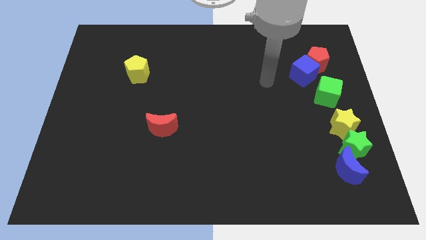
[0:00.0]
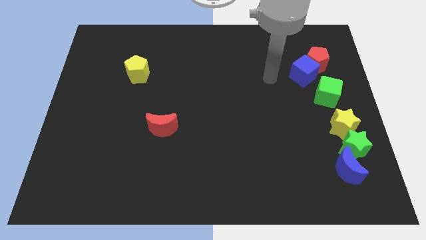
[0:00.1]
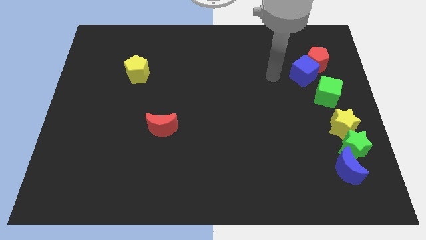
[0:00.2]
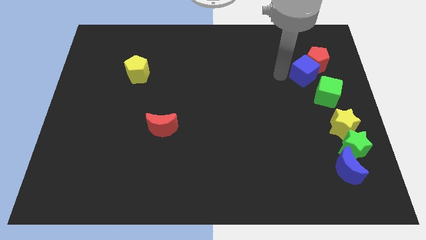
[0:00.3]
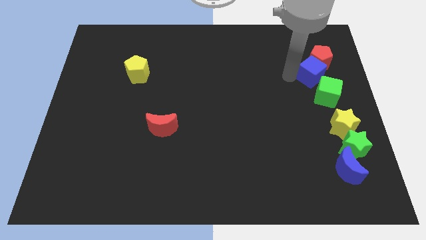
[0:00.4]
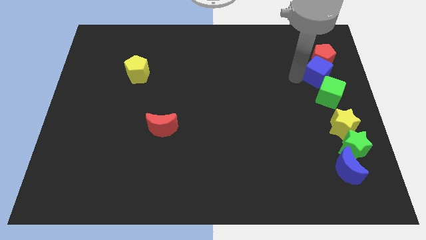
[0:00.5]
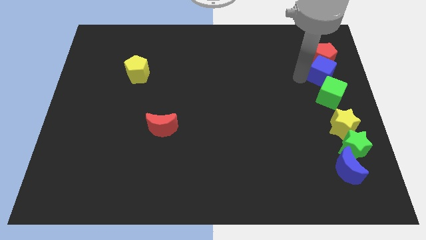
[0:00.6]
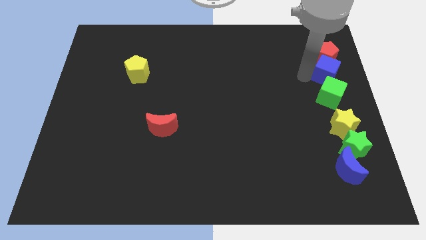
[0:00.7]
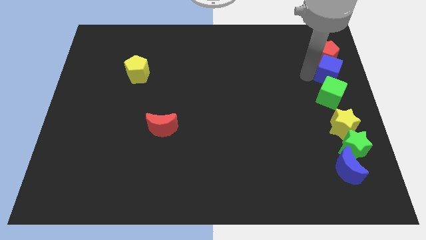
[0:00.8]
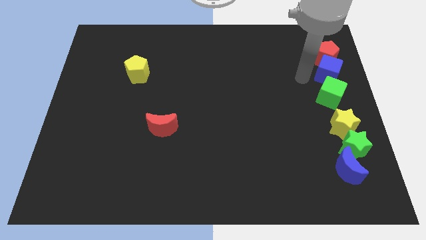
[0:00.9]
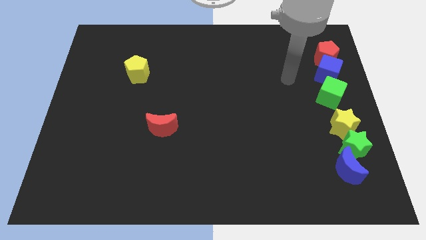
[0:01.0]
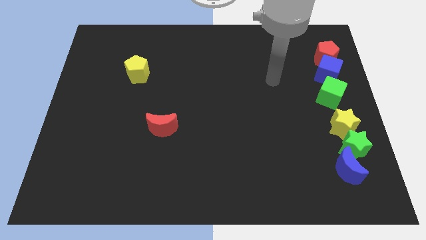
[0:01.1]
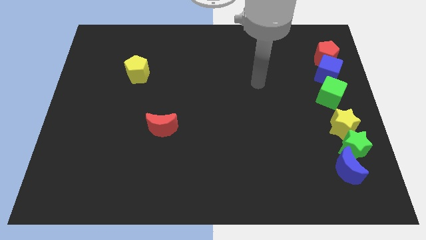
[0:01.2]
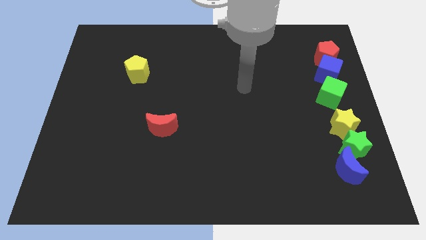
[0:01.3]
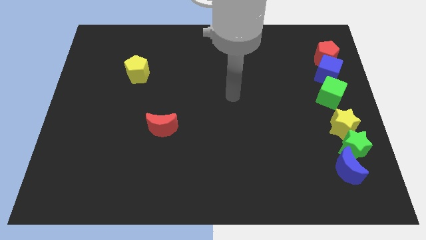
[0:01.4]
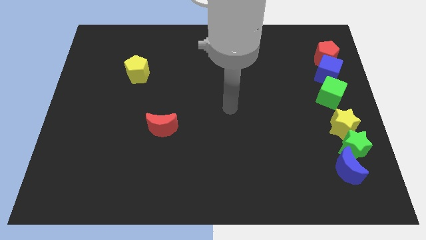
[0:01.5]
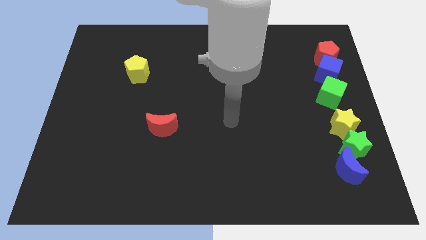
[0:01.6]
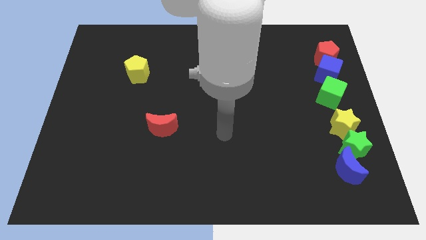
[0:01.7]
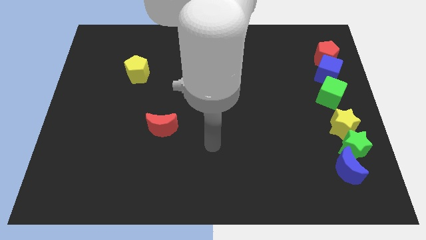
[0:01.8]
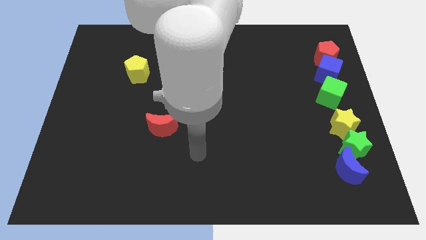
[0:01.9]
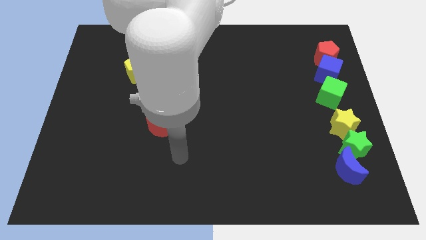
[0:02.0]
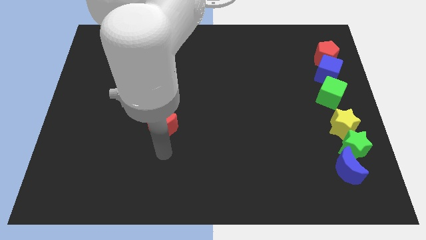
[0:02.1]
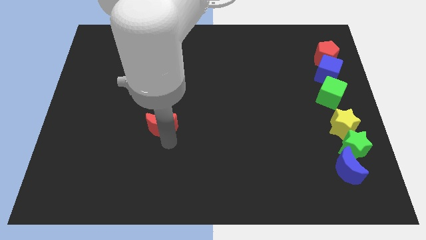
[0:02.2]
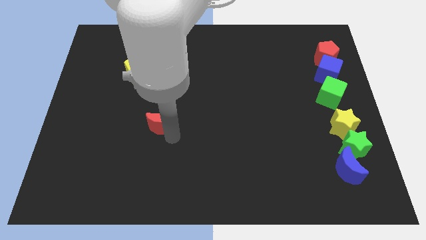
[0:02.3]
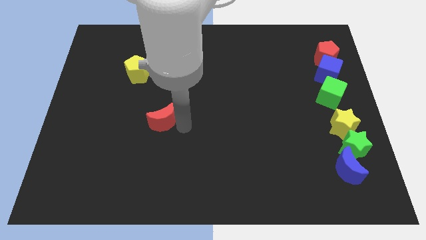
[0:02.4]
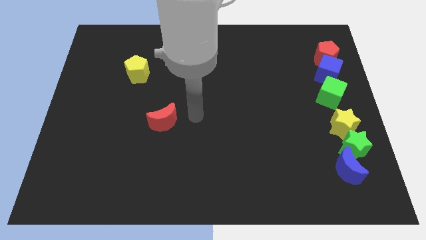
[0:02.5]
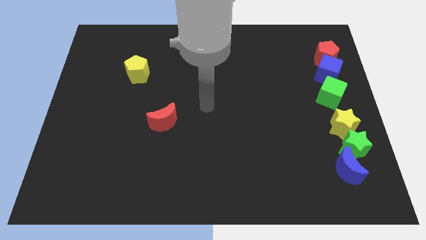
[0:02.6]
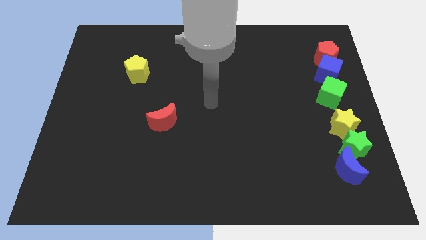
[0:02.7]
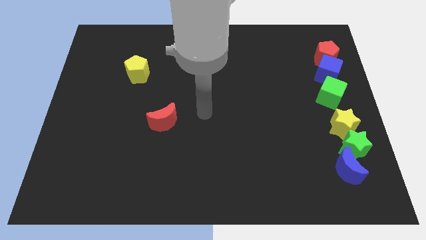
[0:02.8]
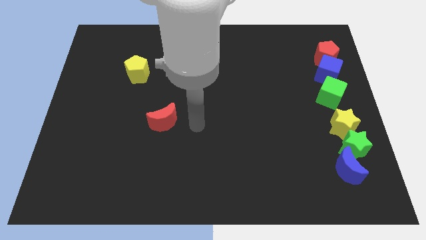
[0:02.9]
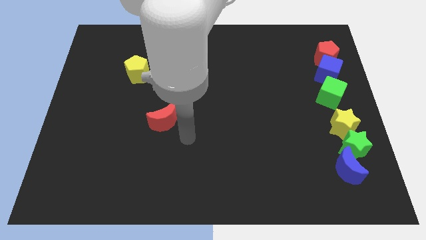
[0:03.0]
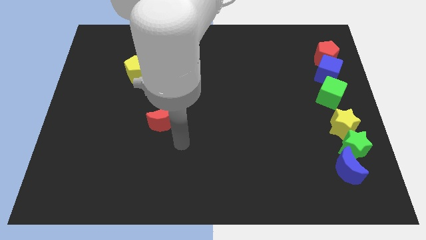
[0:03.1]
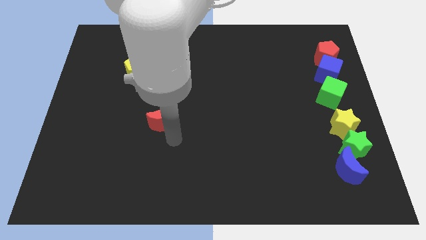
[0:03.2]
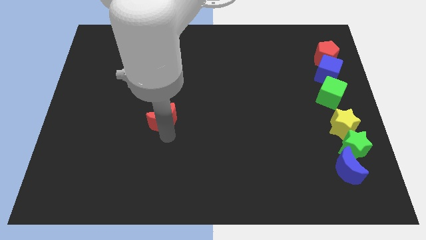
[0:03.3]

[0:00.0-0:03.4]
place the blue cube to the top of the green cube

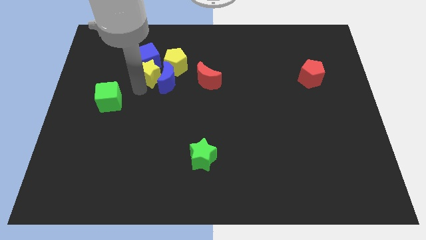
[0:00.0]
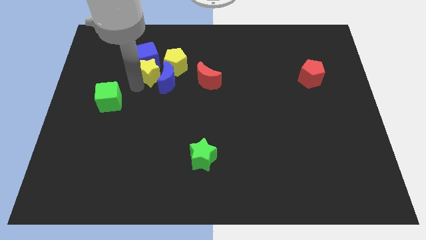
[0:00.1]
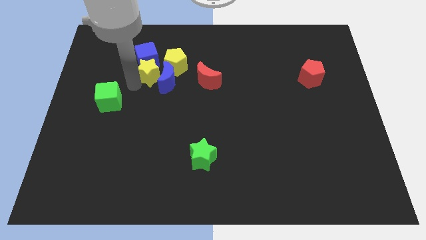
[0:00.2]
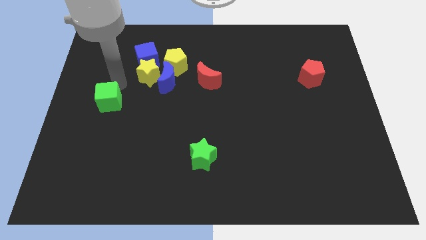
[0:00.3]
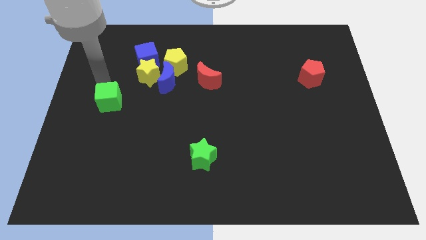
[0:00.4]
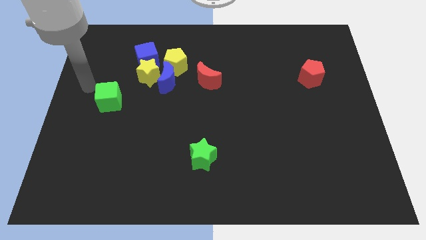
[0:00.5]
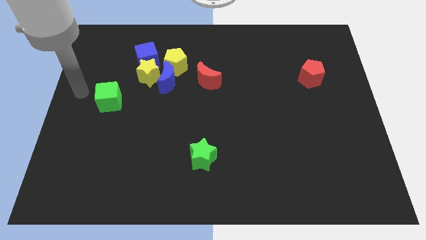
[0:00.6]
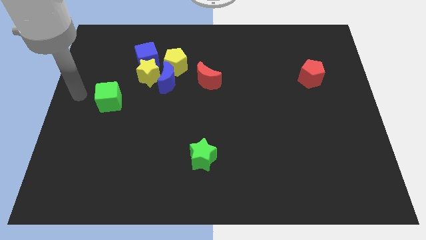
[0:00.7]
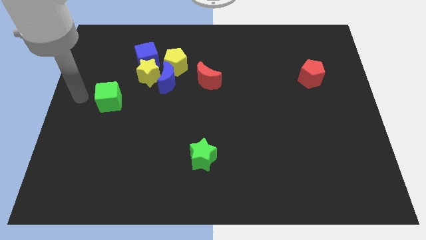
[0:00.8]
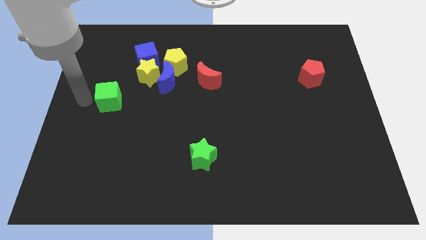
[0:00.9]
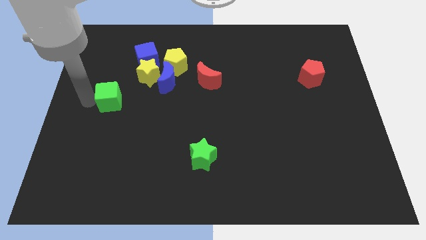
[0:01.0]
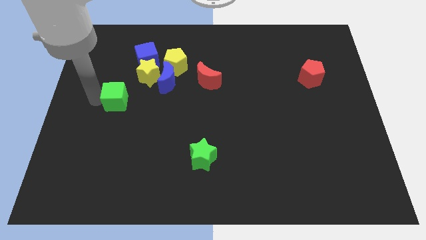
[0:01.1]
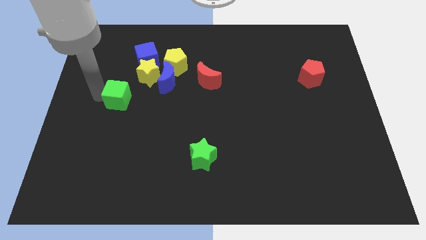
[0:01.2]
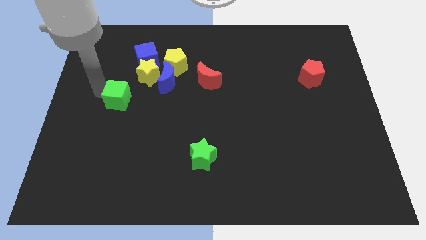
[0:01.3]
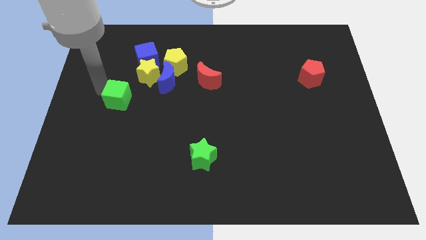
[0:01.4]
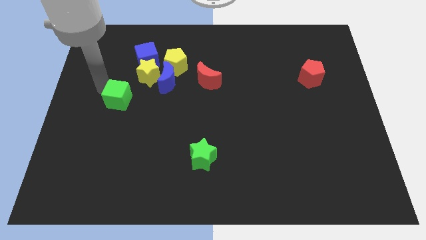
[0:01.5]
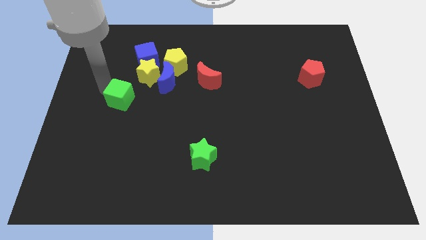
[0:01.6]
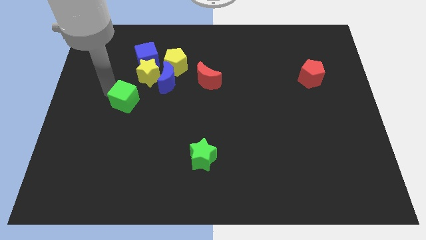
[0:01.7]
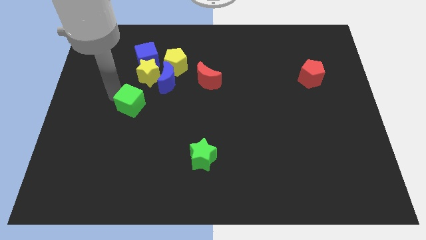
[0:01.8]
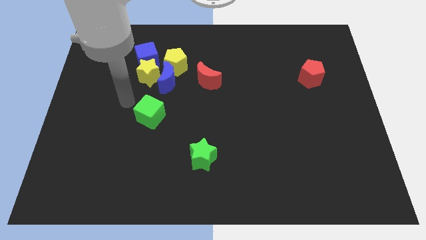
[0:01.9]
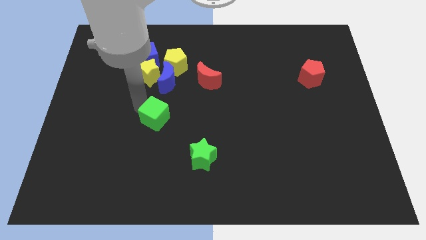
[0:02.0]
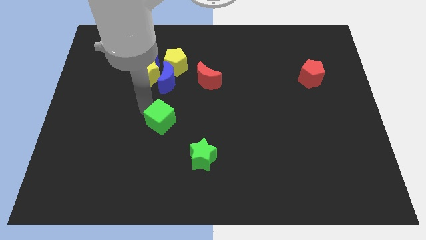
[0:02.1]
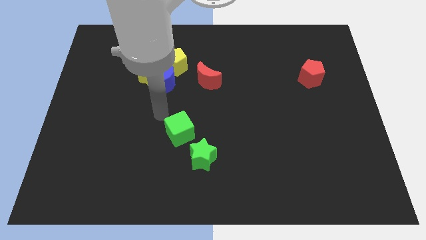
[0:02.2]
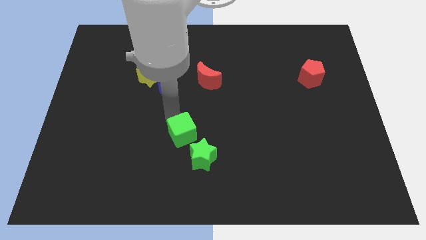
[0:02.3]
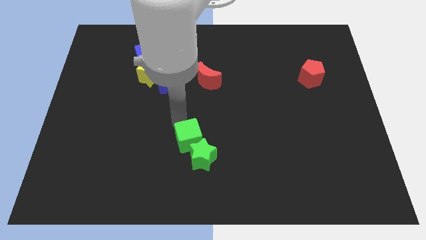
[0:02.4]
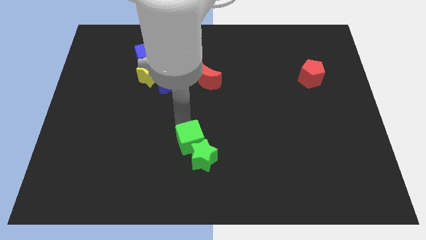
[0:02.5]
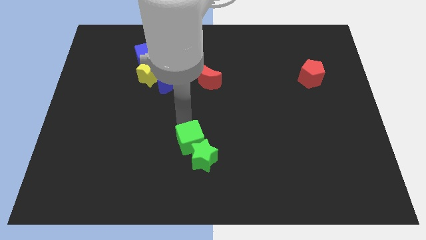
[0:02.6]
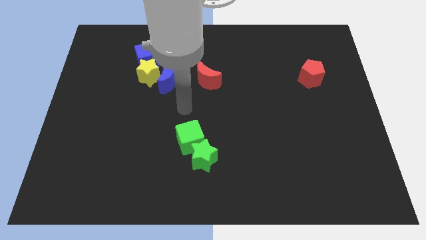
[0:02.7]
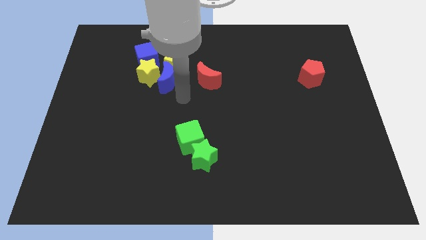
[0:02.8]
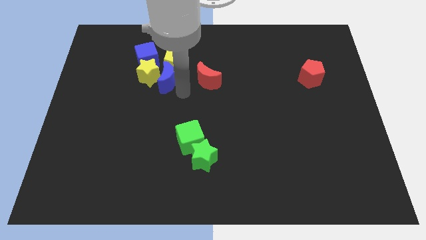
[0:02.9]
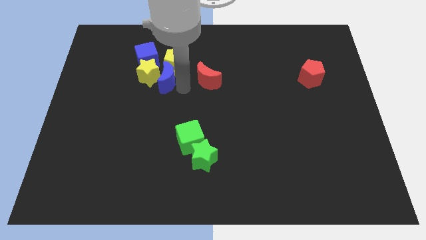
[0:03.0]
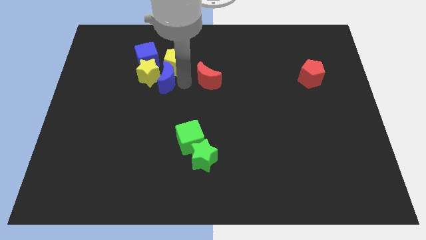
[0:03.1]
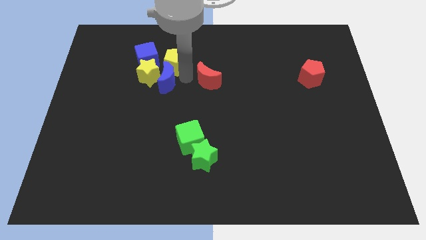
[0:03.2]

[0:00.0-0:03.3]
push the green cube into the green star

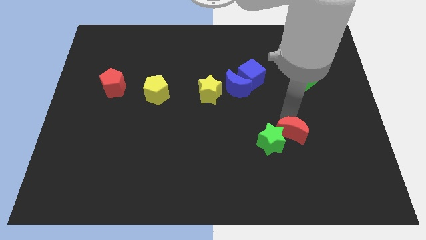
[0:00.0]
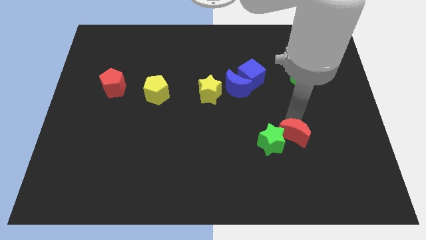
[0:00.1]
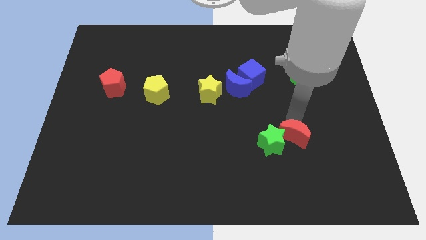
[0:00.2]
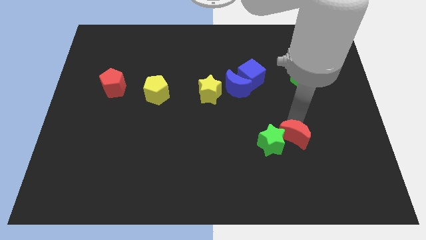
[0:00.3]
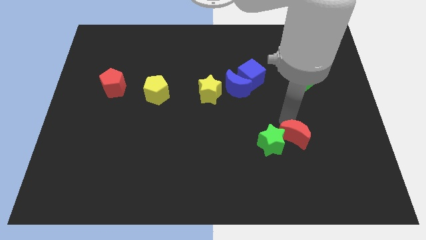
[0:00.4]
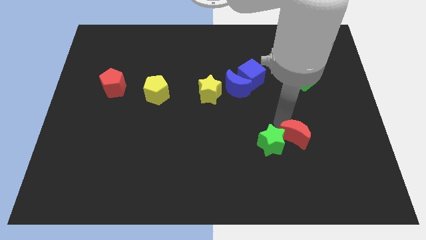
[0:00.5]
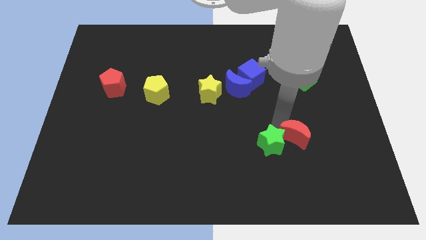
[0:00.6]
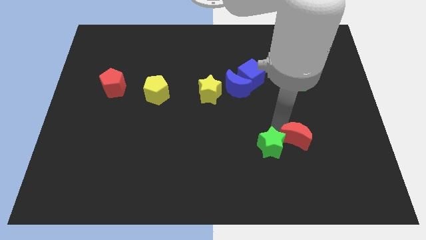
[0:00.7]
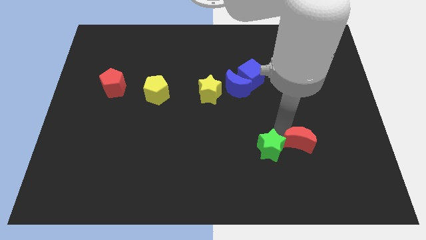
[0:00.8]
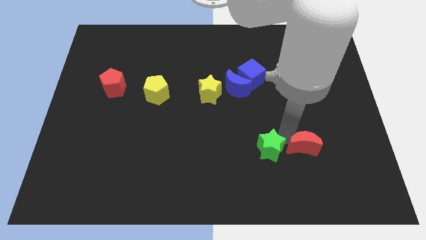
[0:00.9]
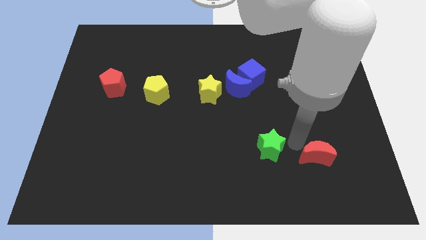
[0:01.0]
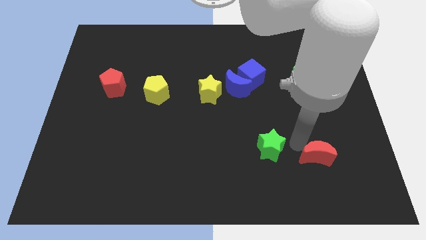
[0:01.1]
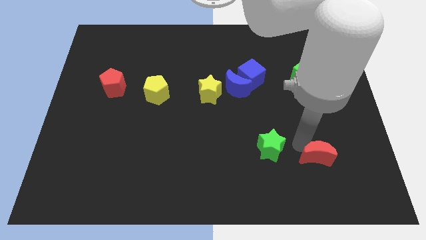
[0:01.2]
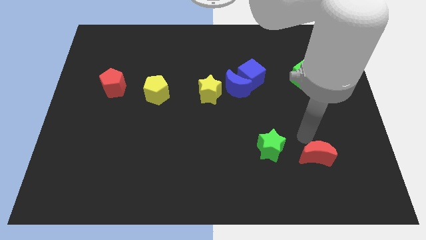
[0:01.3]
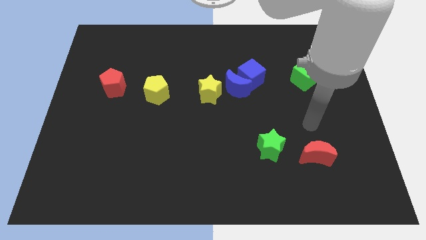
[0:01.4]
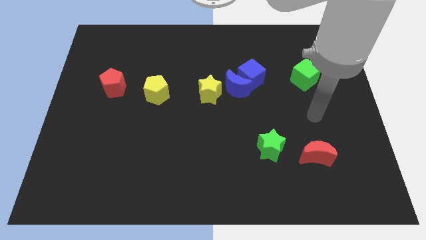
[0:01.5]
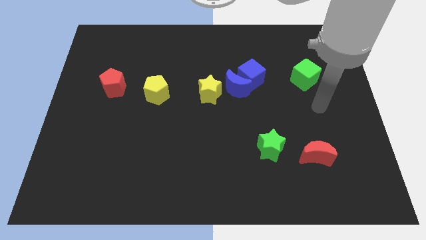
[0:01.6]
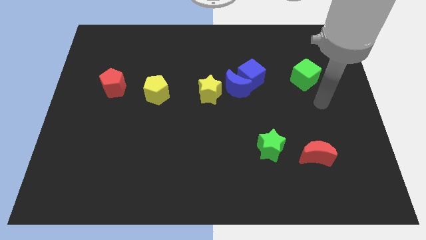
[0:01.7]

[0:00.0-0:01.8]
separate the green star and red crescent

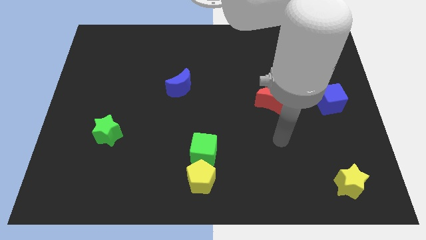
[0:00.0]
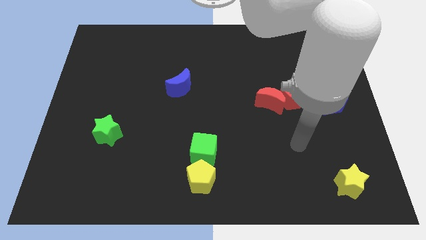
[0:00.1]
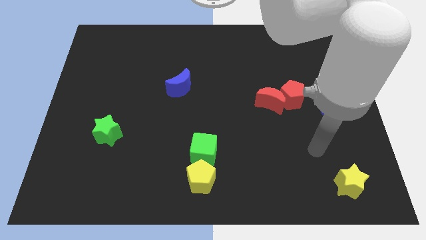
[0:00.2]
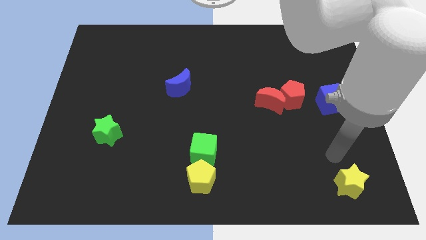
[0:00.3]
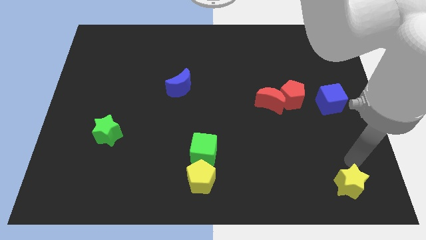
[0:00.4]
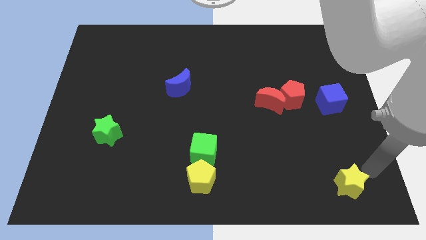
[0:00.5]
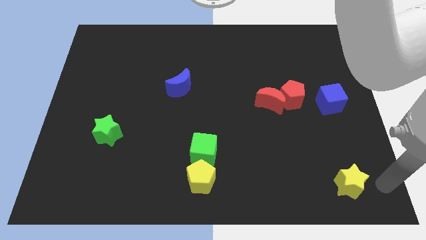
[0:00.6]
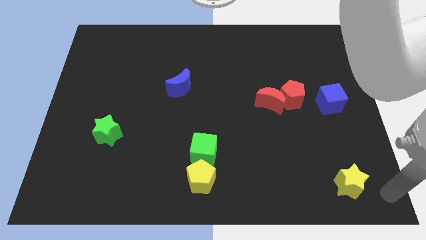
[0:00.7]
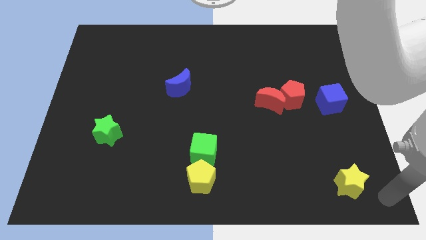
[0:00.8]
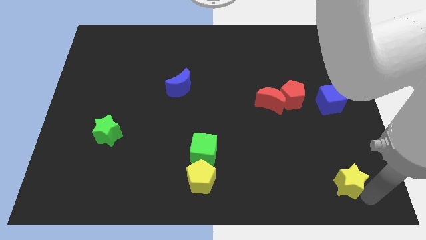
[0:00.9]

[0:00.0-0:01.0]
move your arm to the bottom of the yellow star
